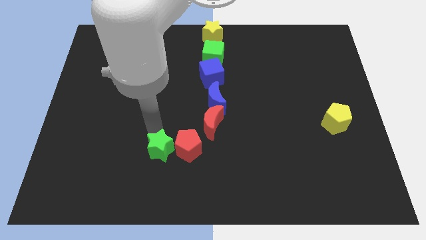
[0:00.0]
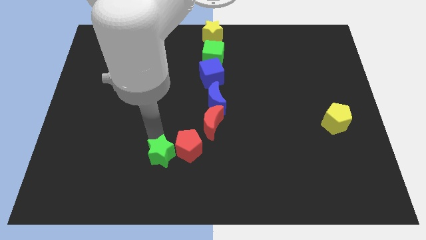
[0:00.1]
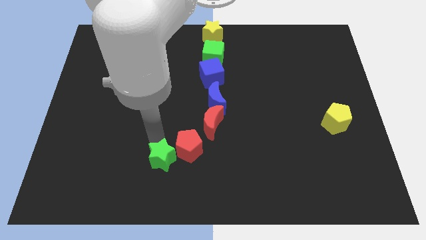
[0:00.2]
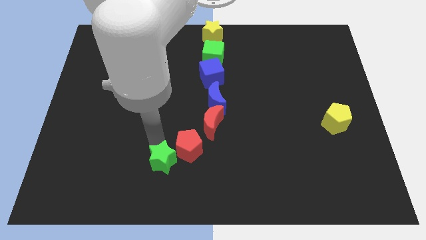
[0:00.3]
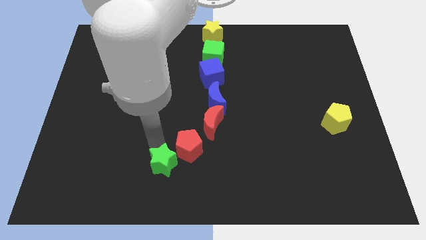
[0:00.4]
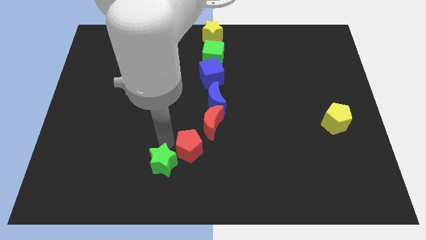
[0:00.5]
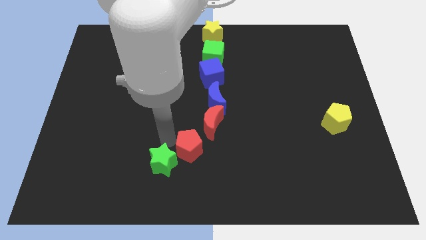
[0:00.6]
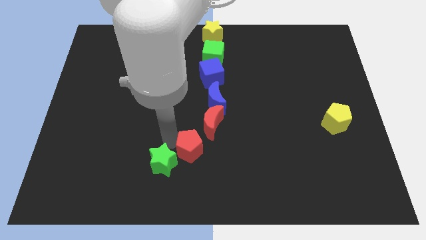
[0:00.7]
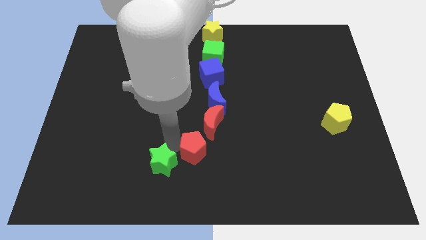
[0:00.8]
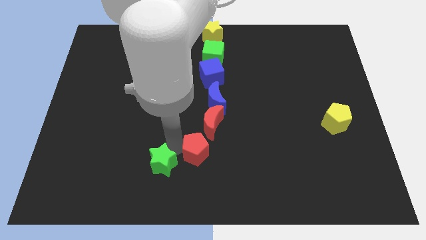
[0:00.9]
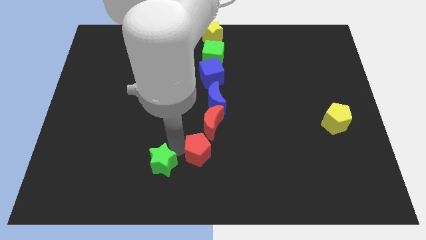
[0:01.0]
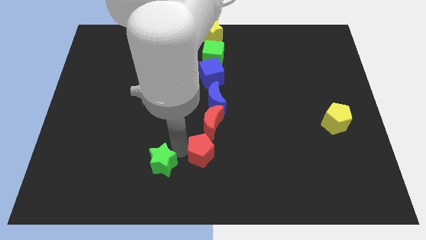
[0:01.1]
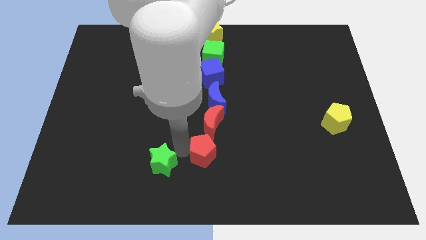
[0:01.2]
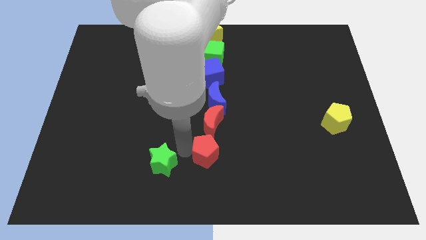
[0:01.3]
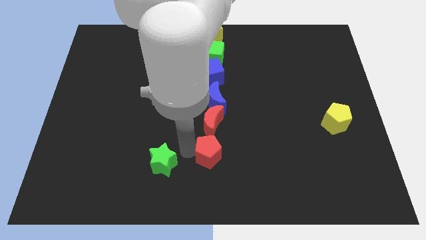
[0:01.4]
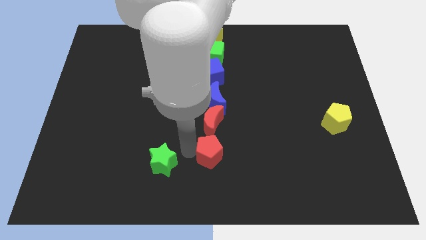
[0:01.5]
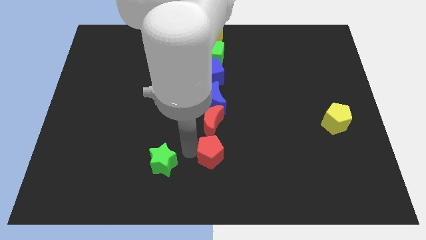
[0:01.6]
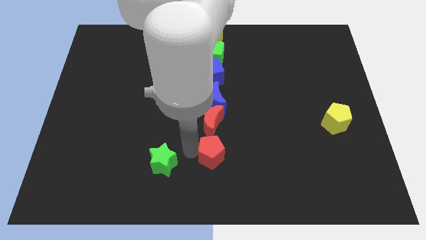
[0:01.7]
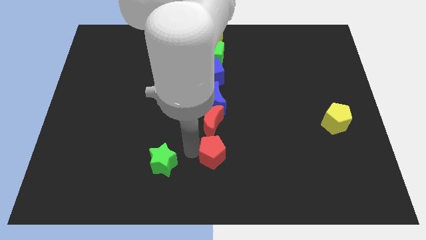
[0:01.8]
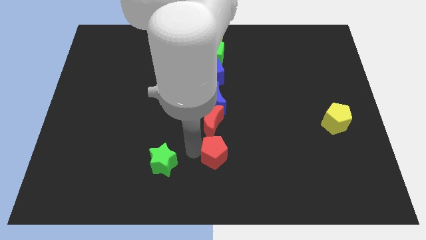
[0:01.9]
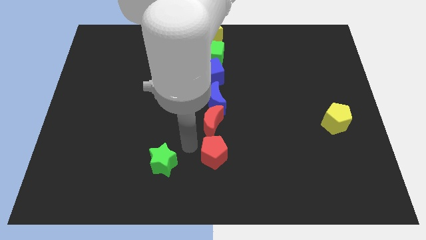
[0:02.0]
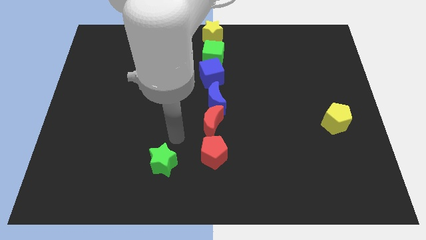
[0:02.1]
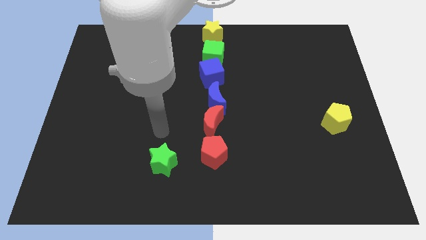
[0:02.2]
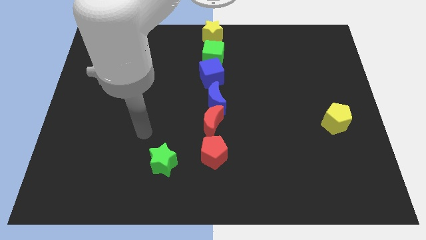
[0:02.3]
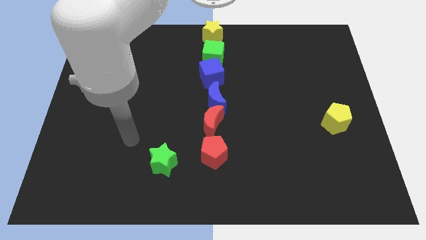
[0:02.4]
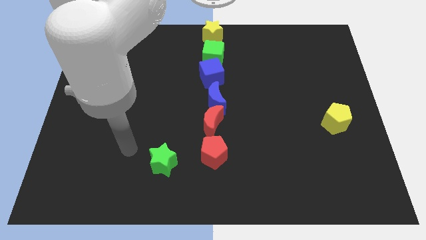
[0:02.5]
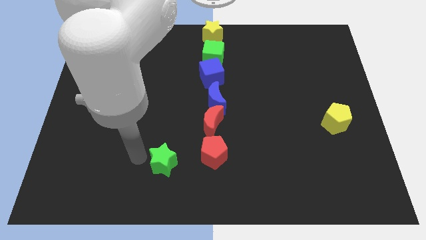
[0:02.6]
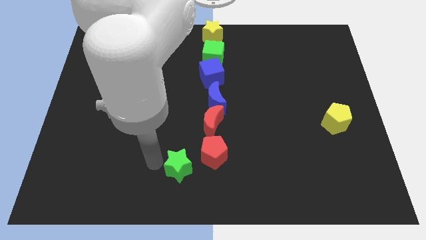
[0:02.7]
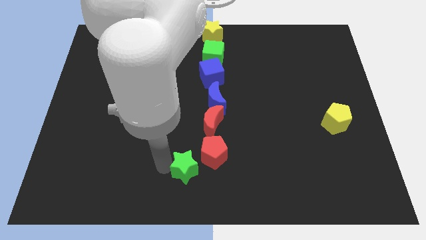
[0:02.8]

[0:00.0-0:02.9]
push red pentagon to the right below red moon

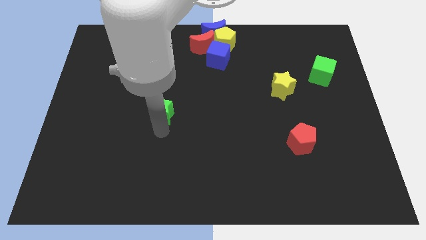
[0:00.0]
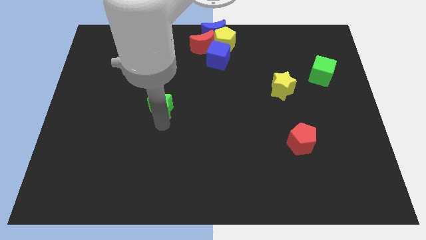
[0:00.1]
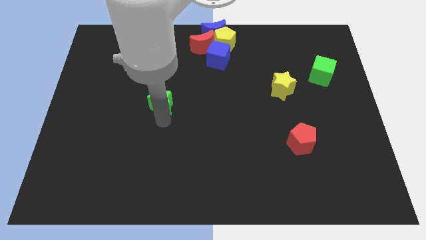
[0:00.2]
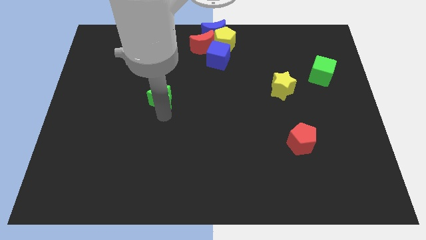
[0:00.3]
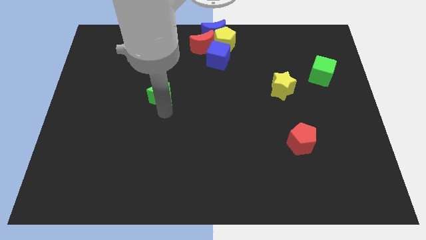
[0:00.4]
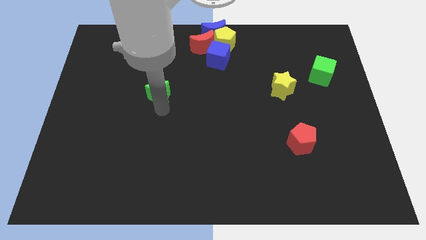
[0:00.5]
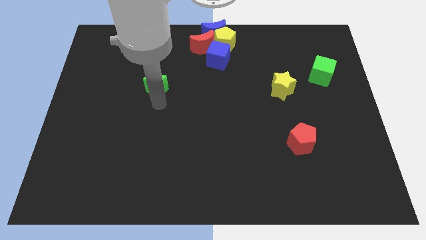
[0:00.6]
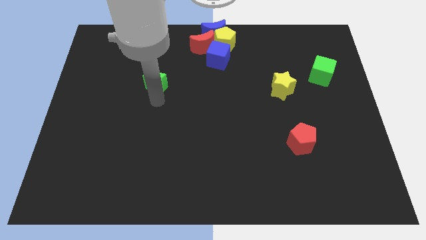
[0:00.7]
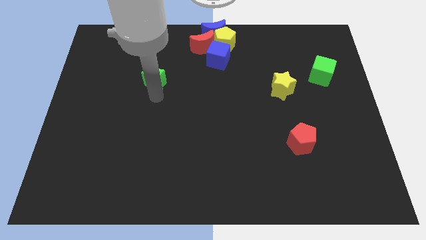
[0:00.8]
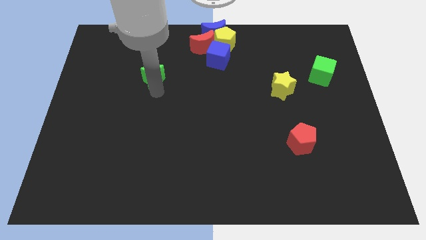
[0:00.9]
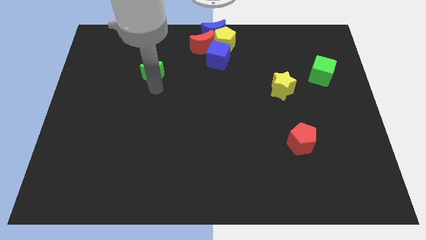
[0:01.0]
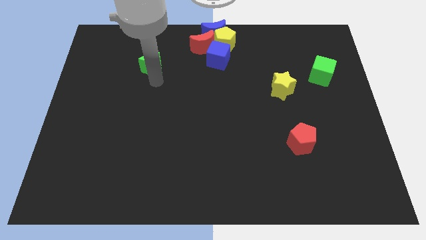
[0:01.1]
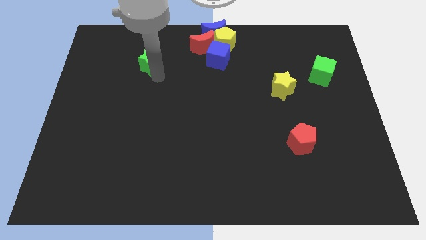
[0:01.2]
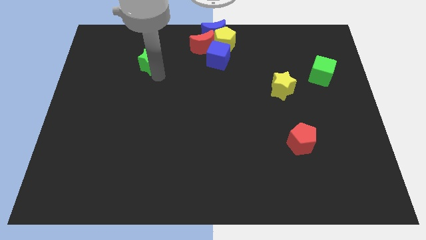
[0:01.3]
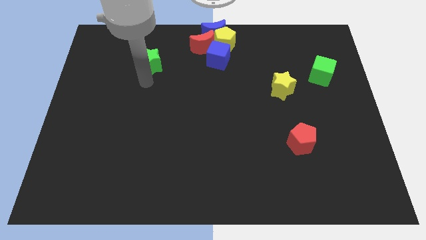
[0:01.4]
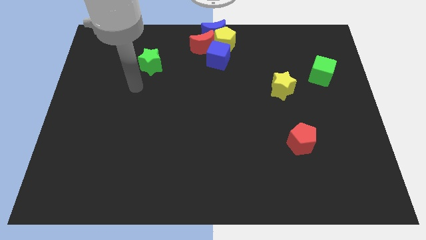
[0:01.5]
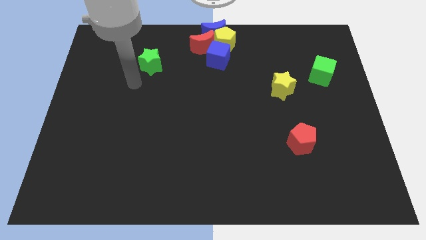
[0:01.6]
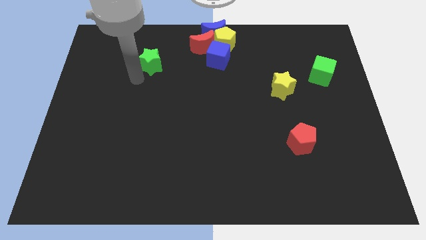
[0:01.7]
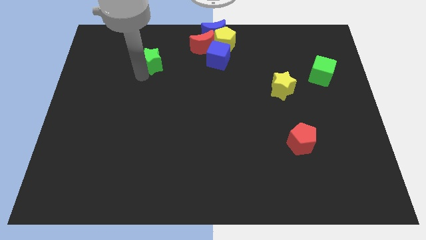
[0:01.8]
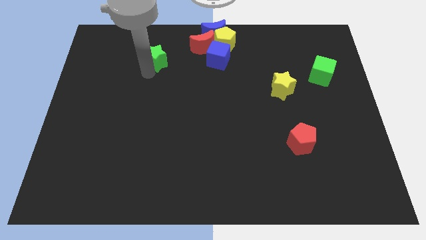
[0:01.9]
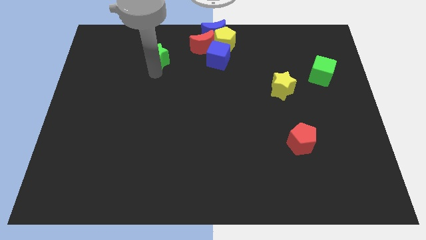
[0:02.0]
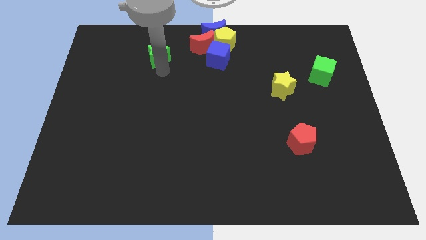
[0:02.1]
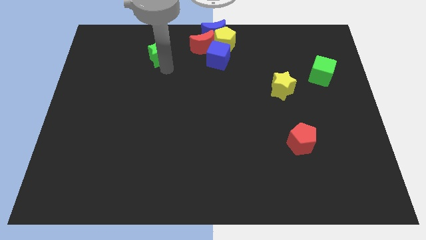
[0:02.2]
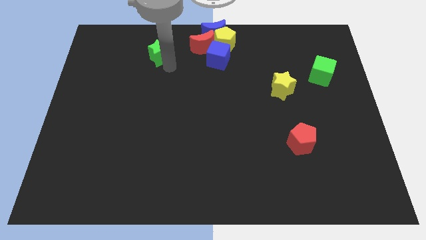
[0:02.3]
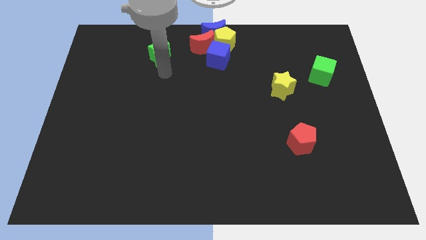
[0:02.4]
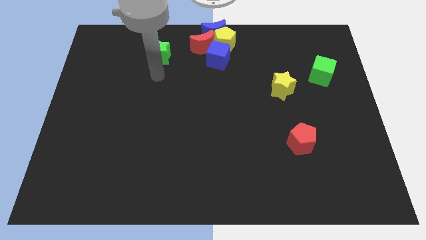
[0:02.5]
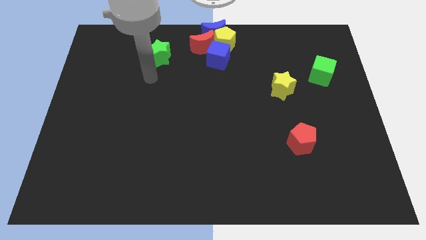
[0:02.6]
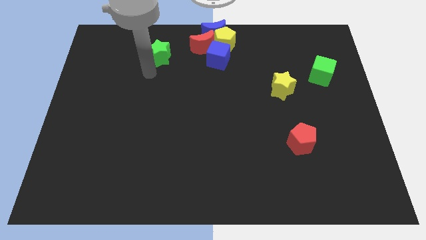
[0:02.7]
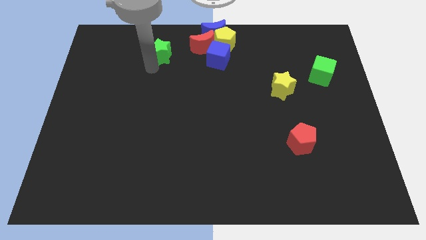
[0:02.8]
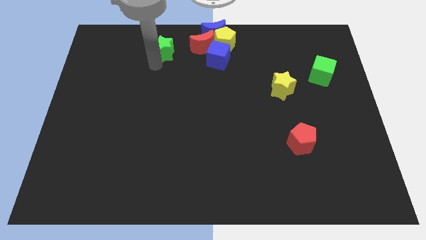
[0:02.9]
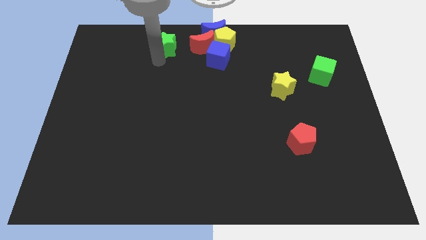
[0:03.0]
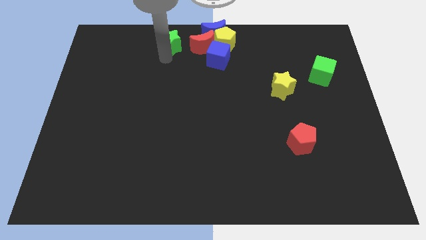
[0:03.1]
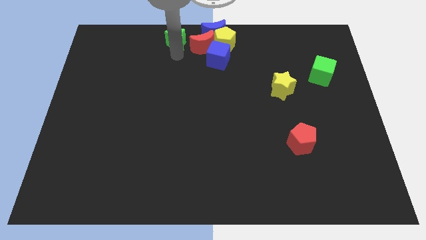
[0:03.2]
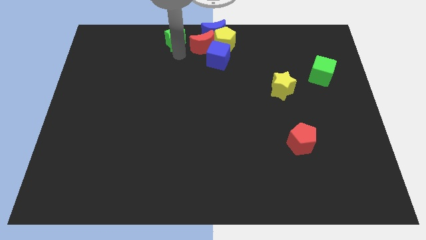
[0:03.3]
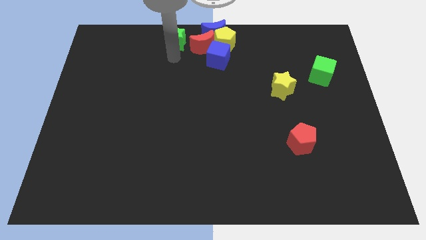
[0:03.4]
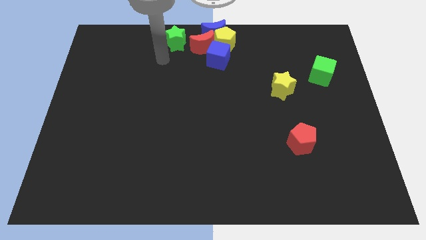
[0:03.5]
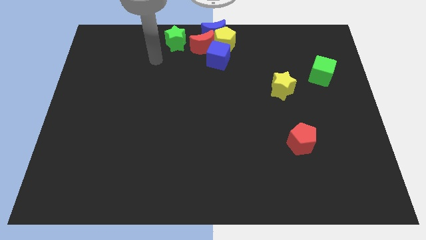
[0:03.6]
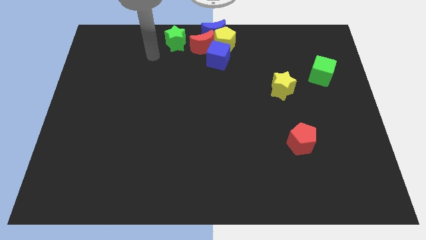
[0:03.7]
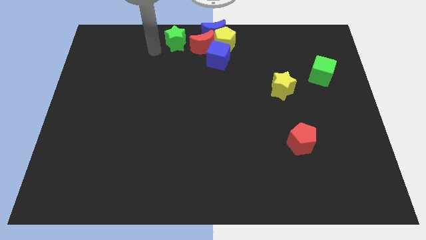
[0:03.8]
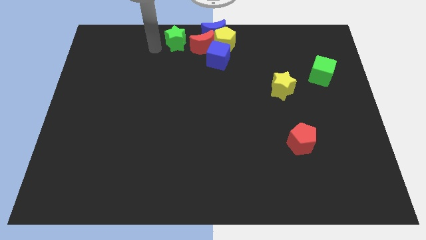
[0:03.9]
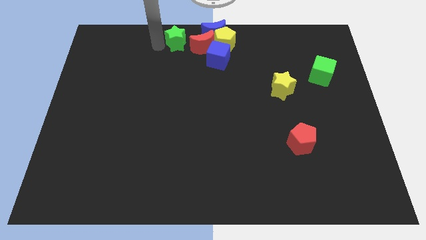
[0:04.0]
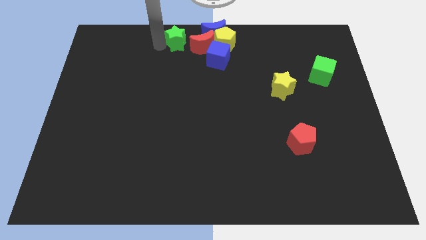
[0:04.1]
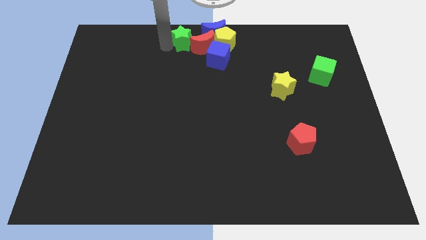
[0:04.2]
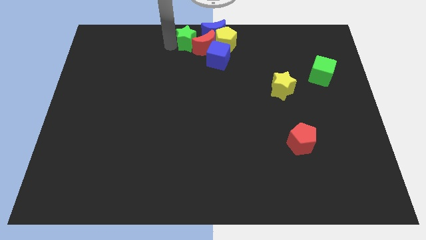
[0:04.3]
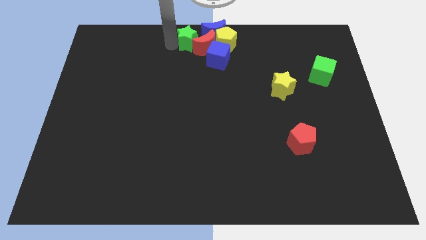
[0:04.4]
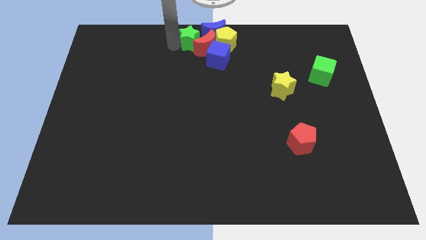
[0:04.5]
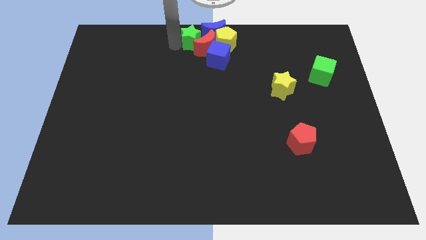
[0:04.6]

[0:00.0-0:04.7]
push the green star into the red crescent

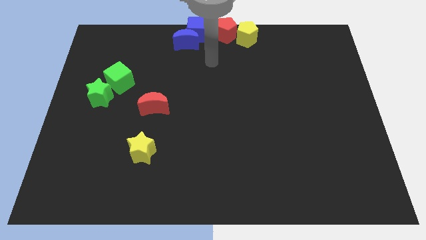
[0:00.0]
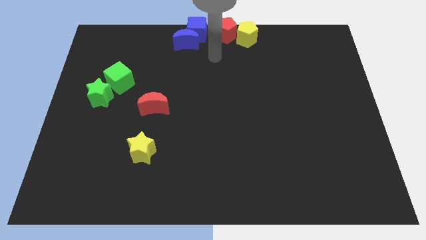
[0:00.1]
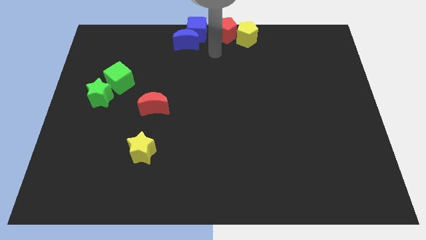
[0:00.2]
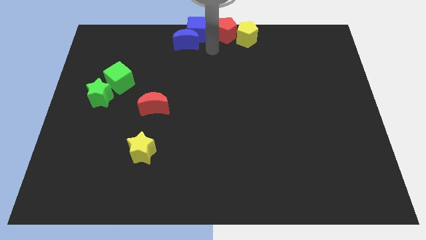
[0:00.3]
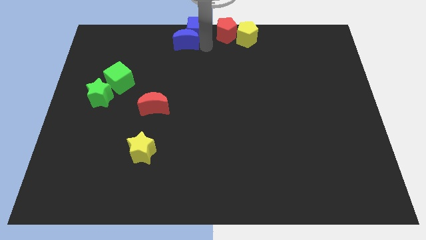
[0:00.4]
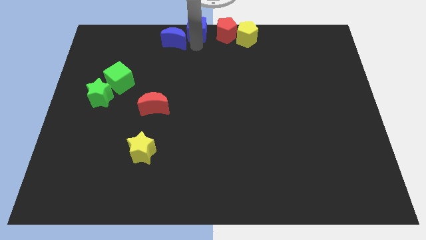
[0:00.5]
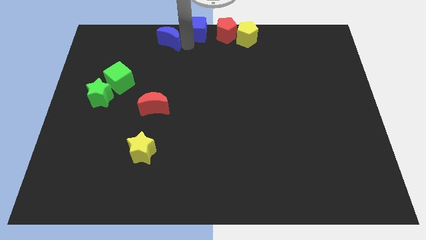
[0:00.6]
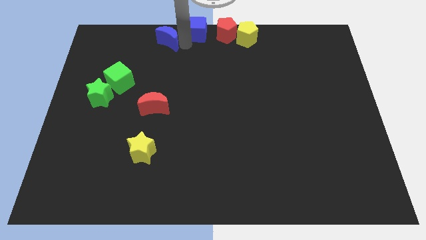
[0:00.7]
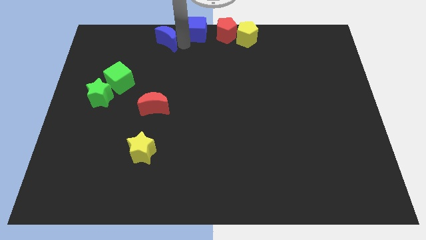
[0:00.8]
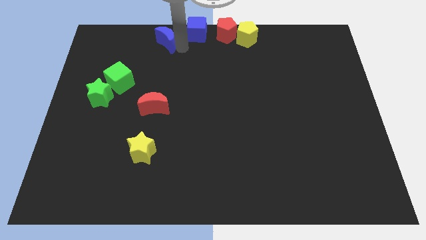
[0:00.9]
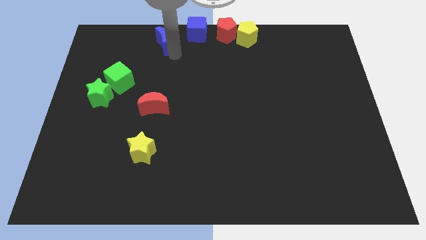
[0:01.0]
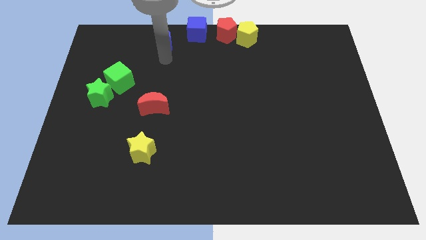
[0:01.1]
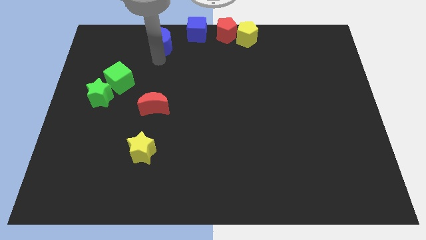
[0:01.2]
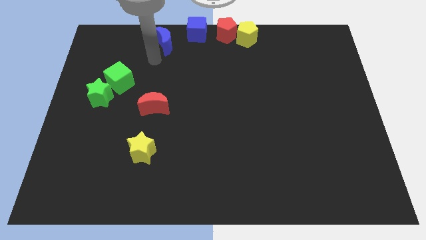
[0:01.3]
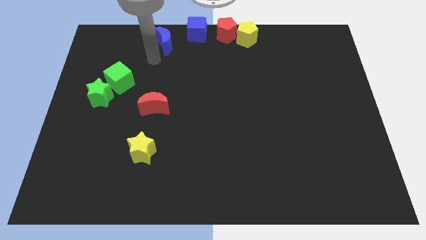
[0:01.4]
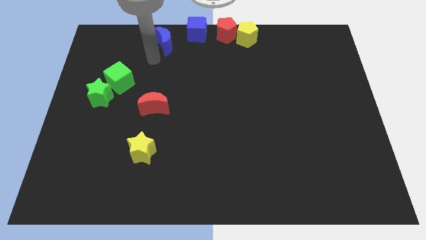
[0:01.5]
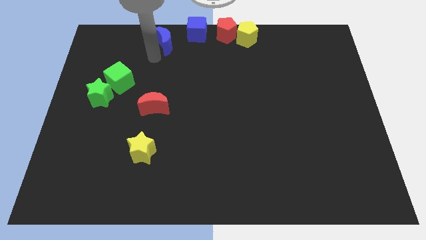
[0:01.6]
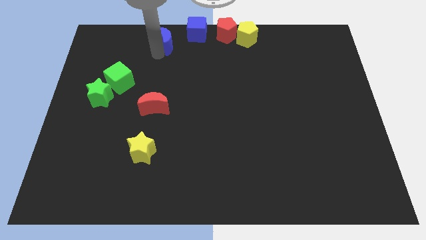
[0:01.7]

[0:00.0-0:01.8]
separate the bleu moon diagonal above green cube

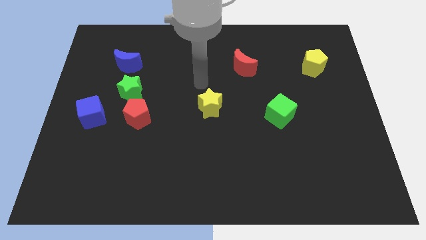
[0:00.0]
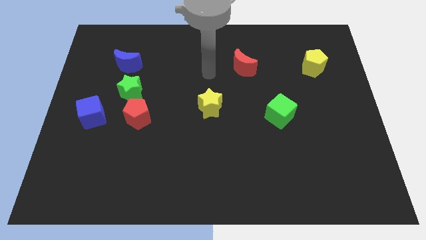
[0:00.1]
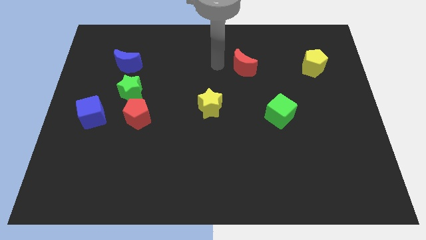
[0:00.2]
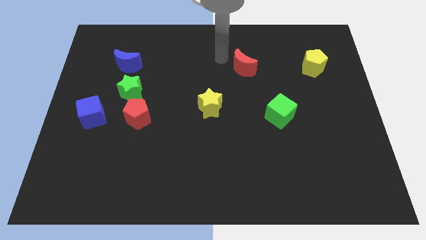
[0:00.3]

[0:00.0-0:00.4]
move the arm towards the red crescent
